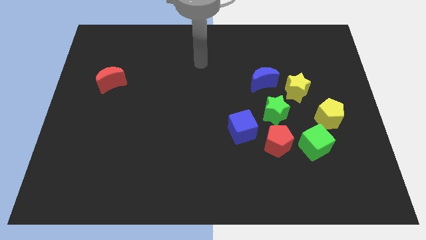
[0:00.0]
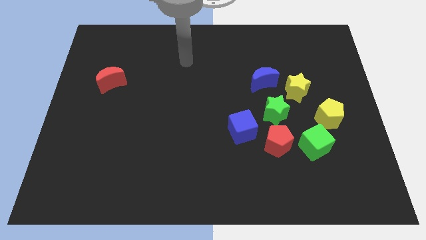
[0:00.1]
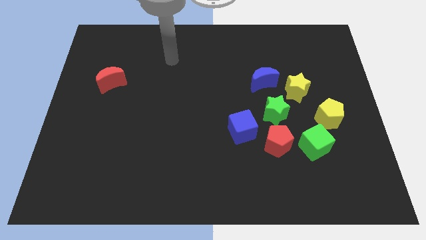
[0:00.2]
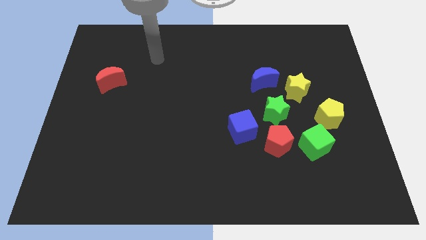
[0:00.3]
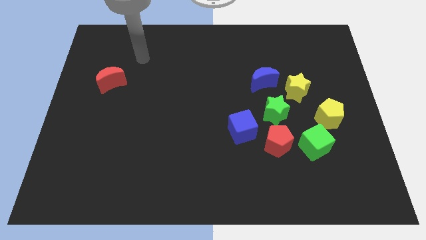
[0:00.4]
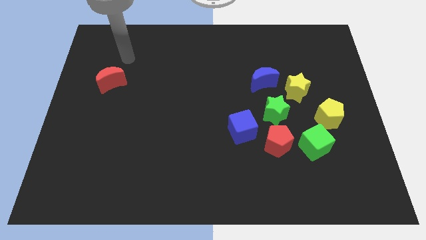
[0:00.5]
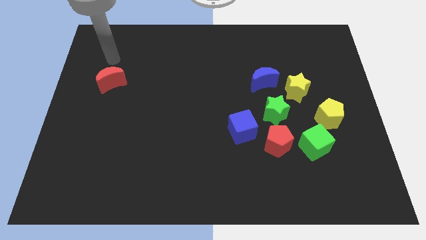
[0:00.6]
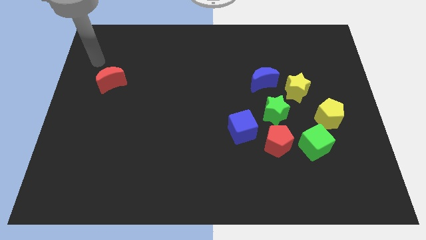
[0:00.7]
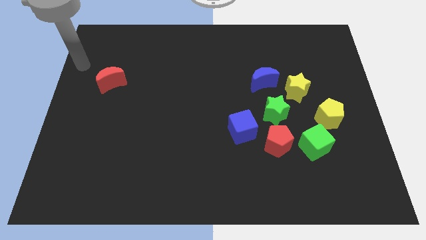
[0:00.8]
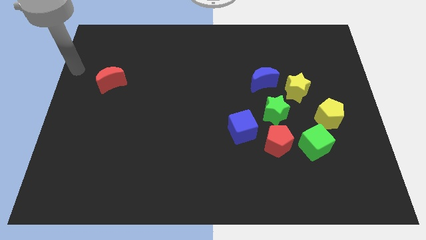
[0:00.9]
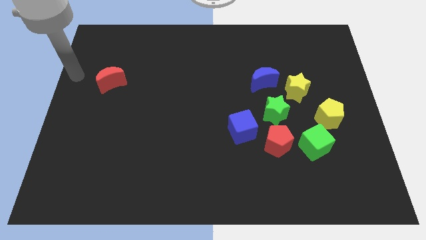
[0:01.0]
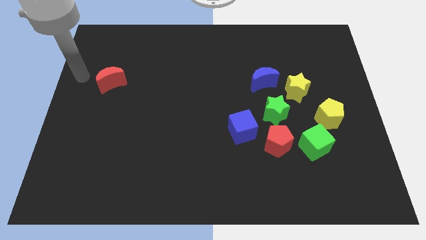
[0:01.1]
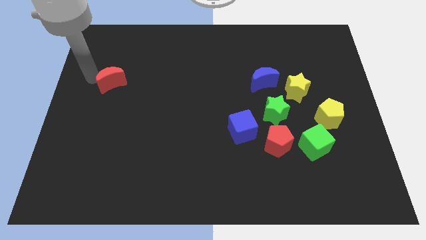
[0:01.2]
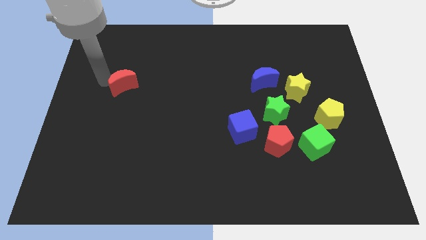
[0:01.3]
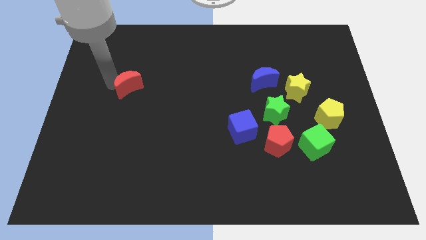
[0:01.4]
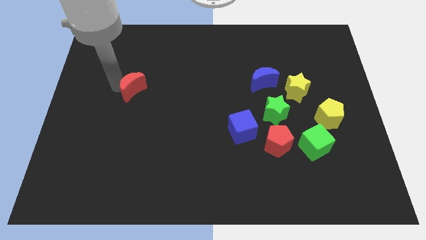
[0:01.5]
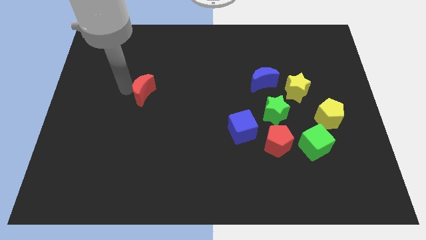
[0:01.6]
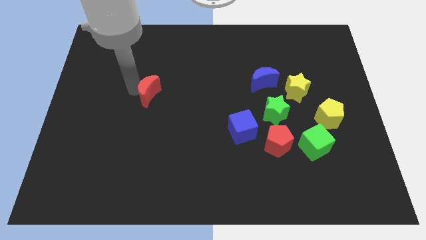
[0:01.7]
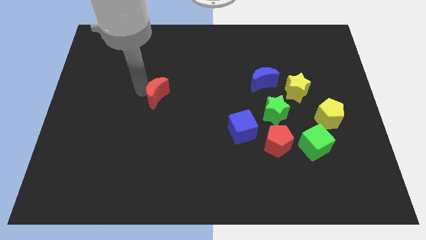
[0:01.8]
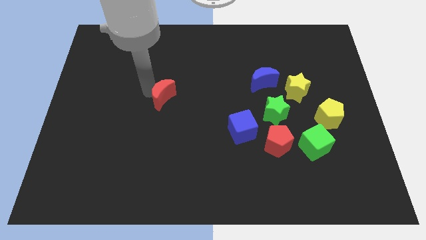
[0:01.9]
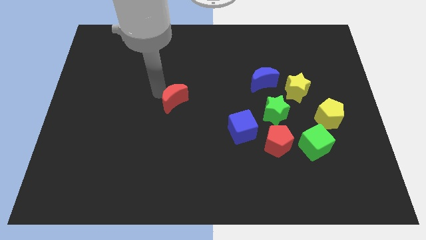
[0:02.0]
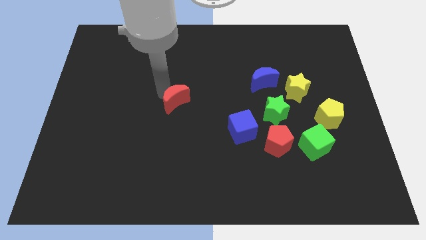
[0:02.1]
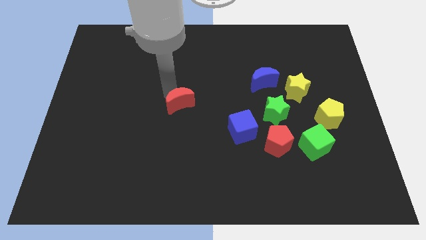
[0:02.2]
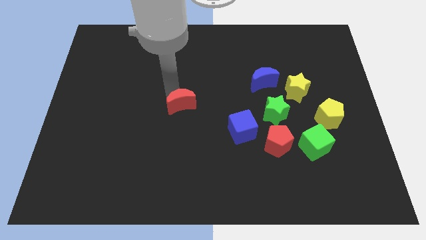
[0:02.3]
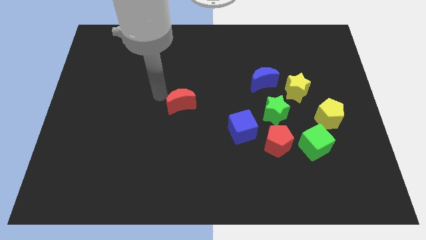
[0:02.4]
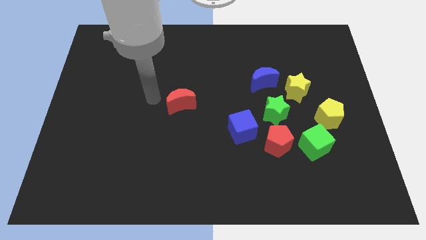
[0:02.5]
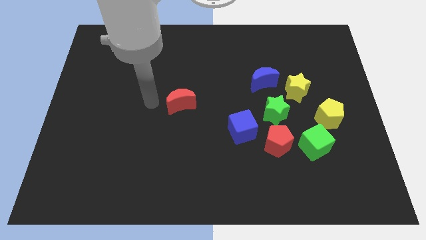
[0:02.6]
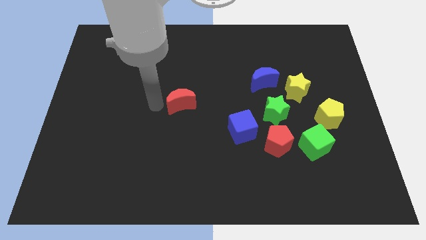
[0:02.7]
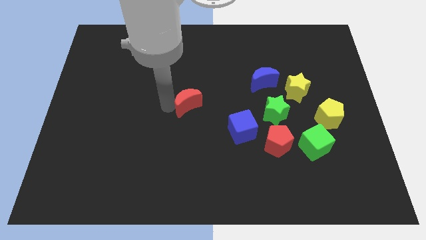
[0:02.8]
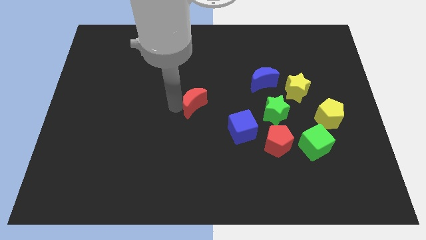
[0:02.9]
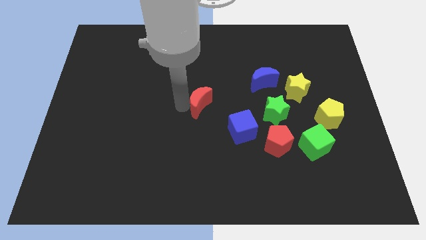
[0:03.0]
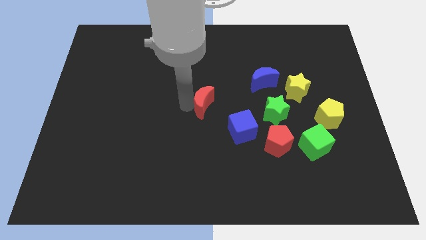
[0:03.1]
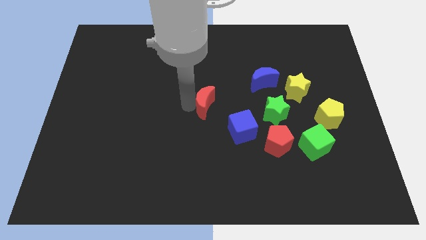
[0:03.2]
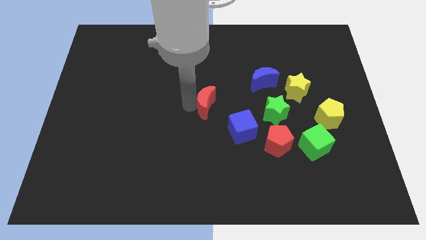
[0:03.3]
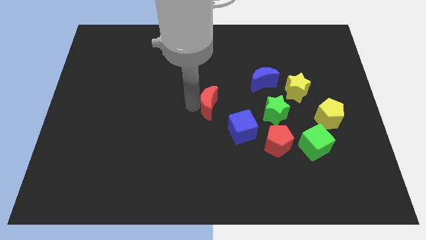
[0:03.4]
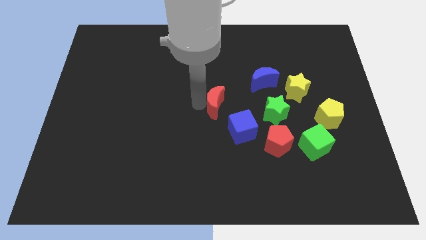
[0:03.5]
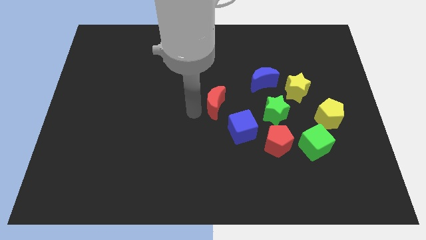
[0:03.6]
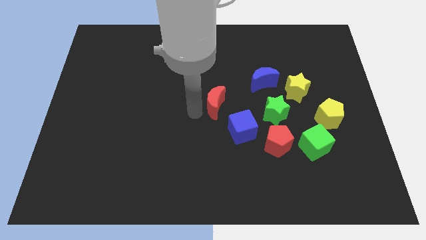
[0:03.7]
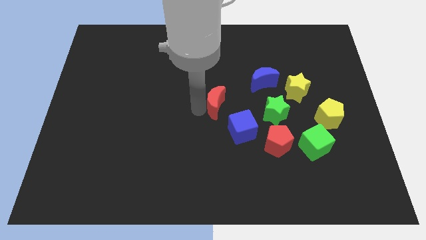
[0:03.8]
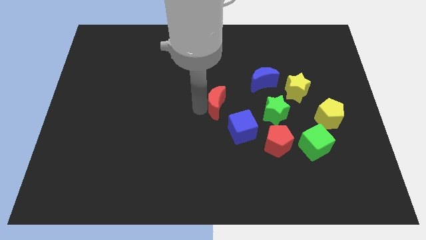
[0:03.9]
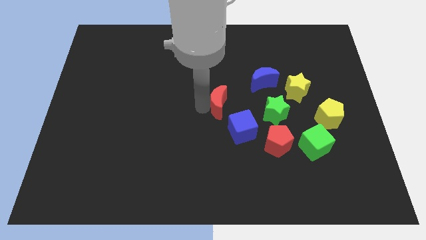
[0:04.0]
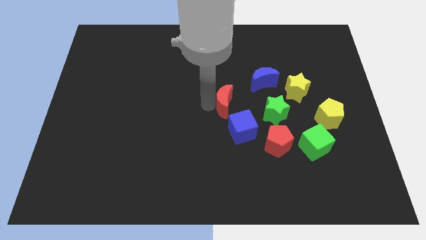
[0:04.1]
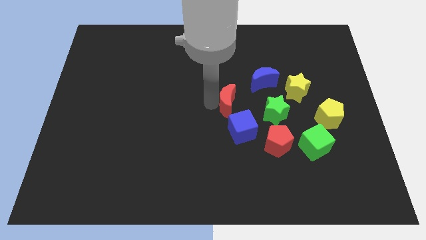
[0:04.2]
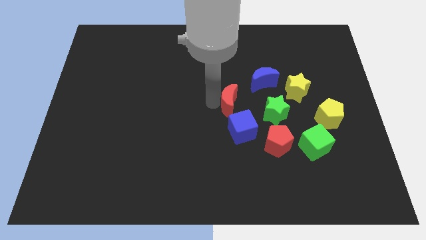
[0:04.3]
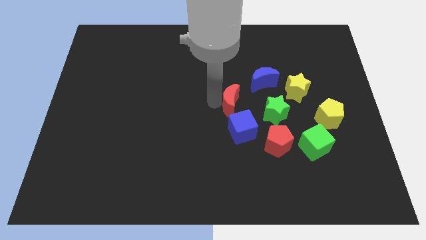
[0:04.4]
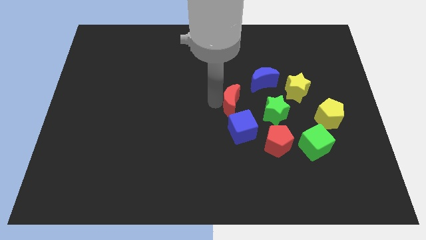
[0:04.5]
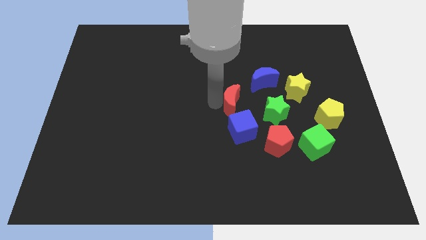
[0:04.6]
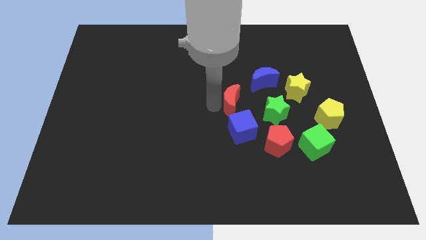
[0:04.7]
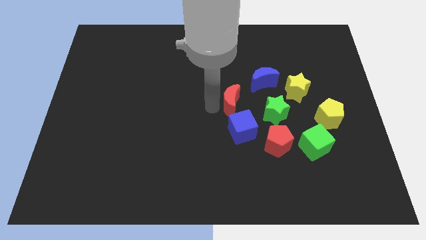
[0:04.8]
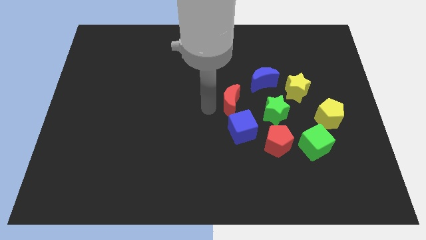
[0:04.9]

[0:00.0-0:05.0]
place the red crescent above the blue cube

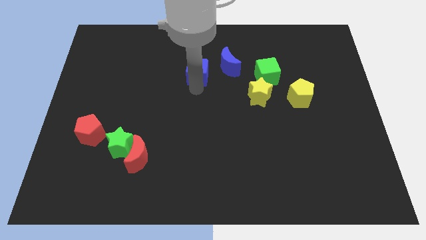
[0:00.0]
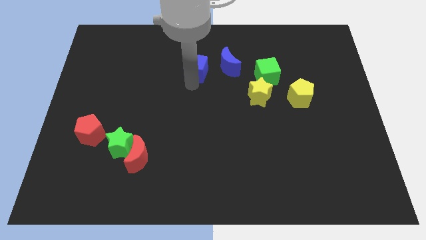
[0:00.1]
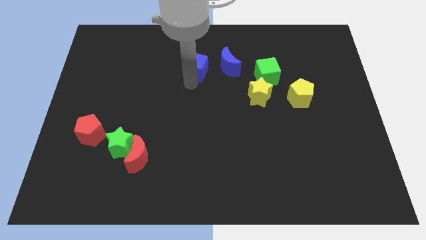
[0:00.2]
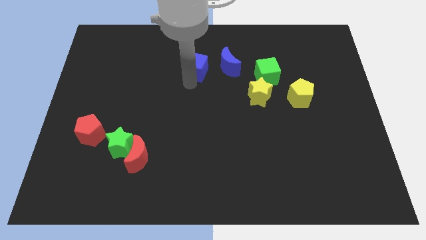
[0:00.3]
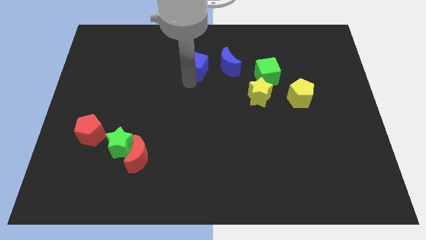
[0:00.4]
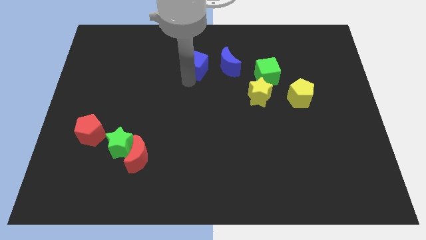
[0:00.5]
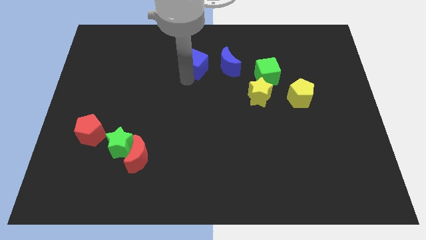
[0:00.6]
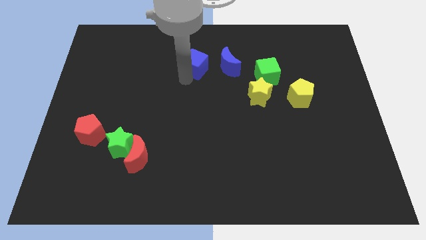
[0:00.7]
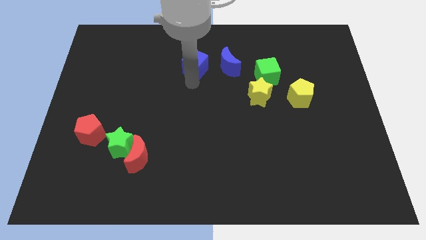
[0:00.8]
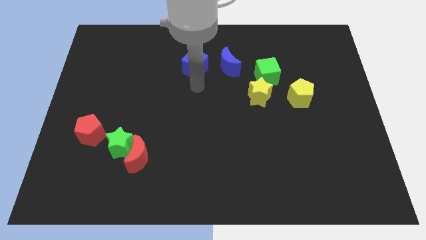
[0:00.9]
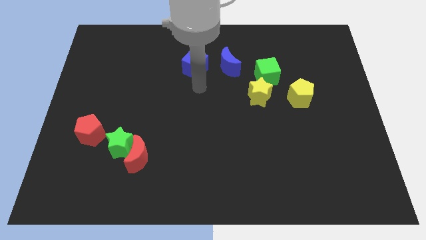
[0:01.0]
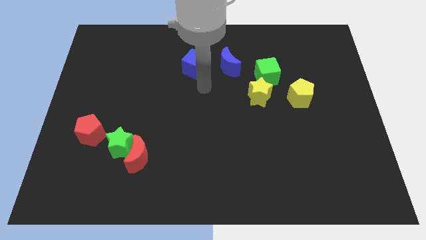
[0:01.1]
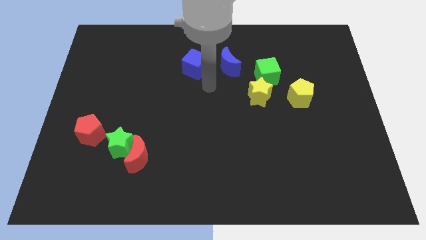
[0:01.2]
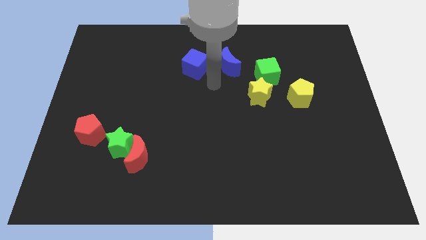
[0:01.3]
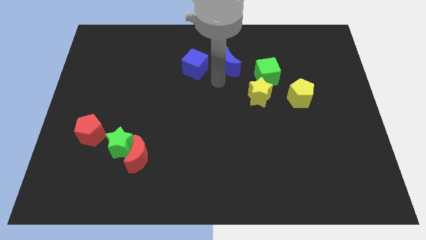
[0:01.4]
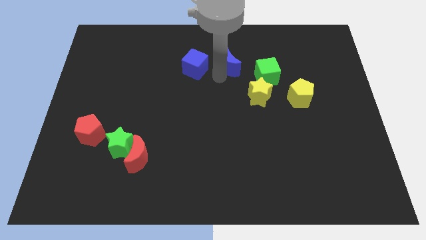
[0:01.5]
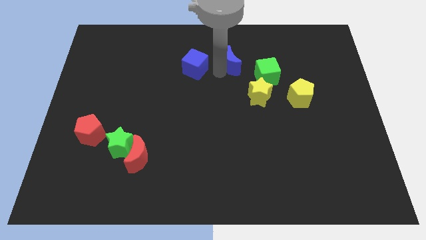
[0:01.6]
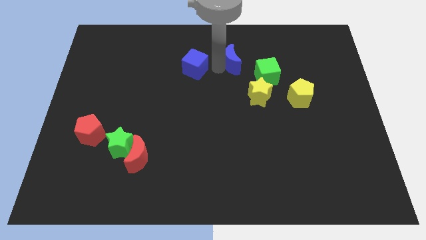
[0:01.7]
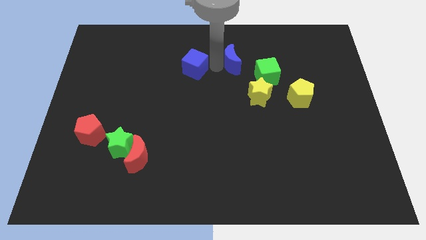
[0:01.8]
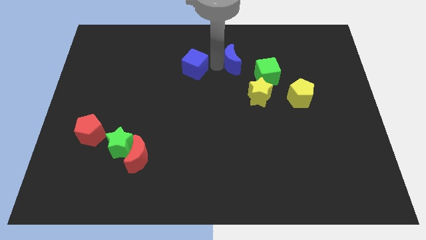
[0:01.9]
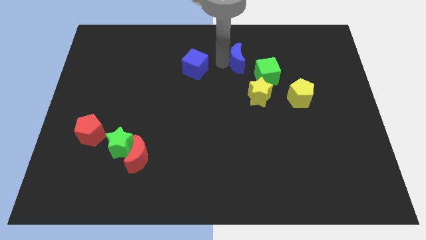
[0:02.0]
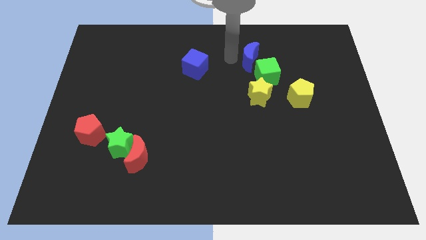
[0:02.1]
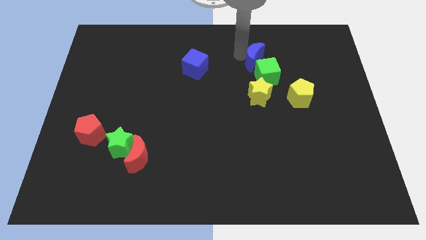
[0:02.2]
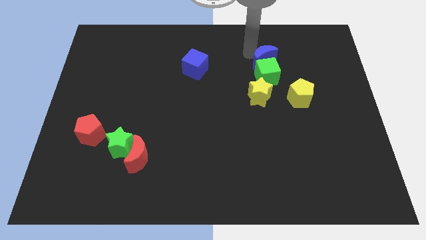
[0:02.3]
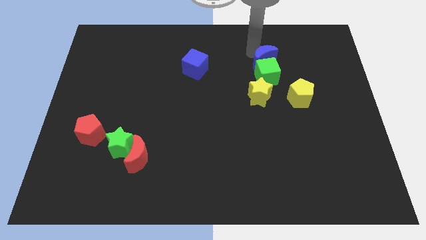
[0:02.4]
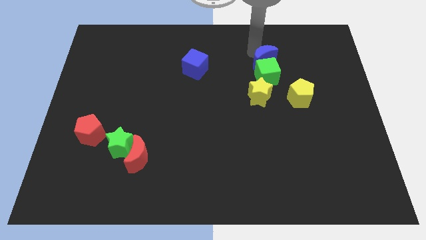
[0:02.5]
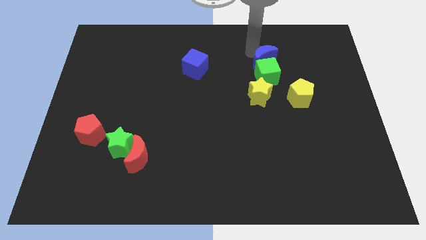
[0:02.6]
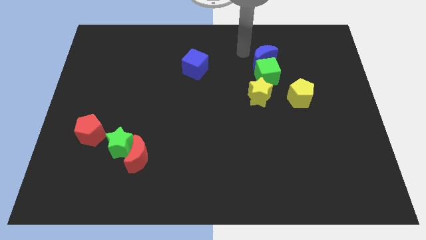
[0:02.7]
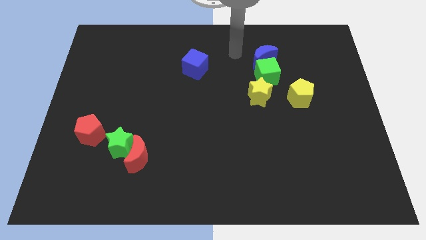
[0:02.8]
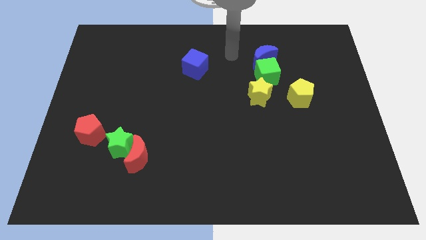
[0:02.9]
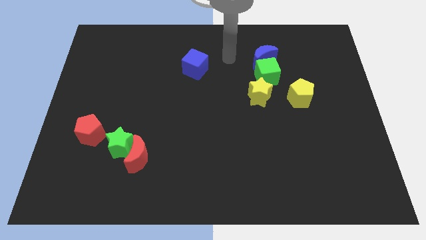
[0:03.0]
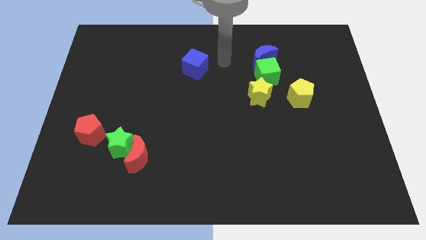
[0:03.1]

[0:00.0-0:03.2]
arrange the blue moon on the top of the green cube

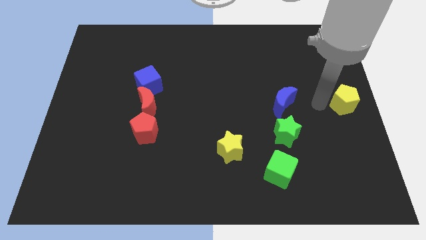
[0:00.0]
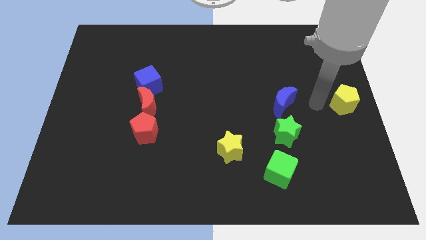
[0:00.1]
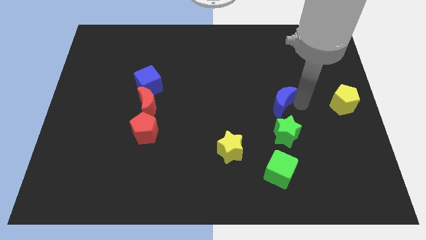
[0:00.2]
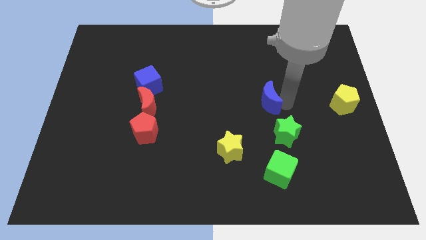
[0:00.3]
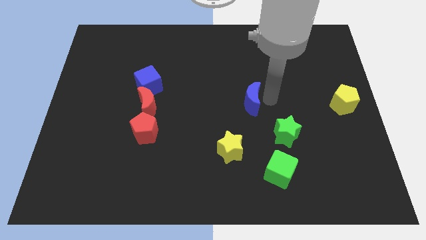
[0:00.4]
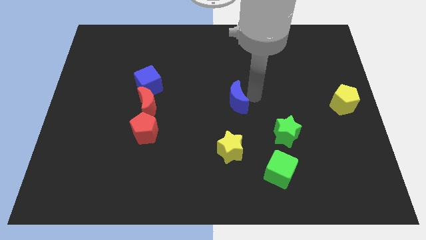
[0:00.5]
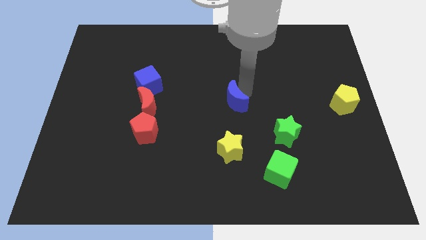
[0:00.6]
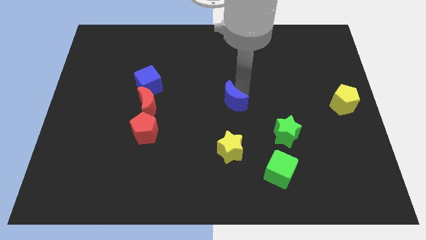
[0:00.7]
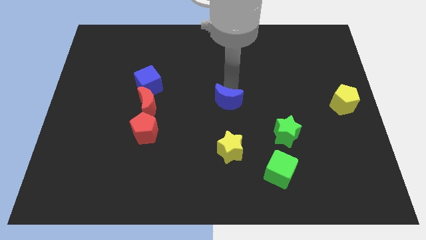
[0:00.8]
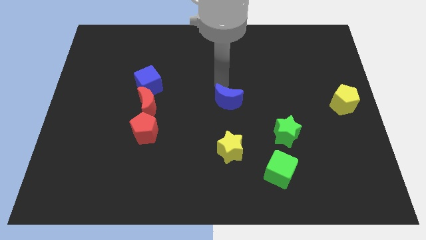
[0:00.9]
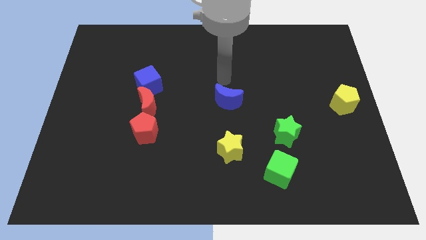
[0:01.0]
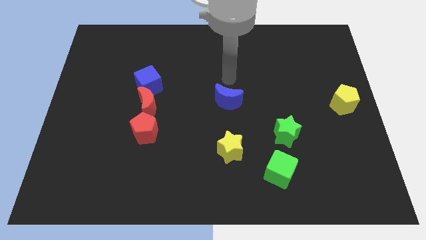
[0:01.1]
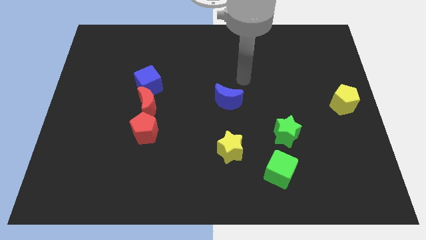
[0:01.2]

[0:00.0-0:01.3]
place the blue crescent above the yellow star
